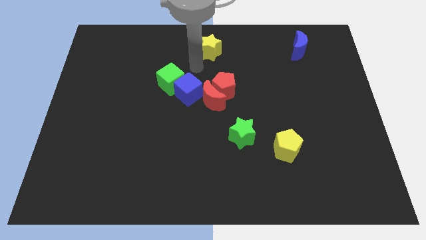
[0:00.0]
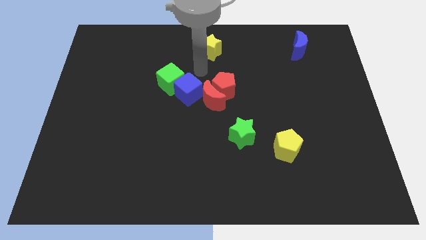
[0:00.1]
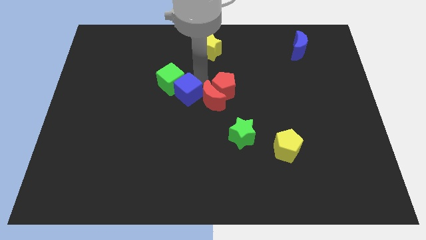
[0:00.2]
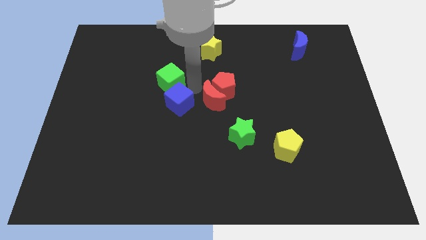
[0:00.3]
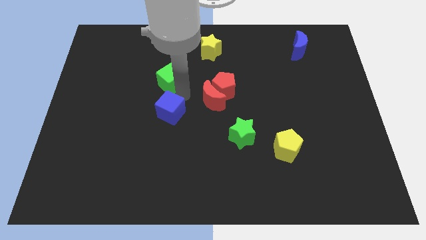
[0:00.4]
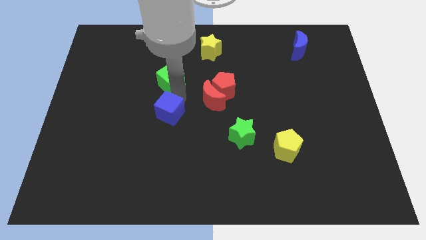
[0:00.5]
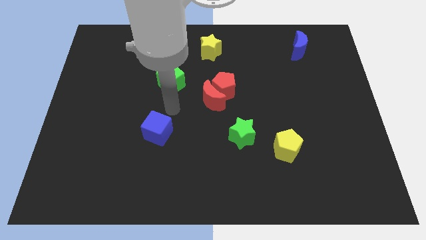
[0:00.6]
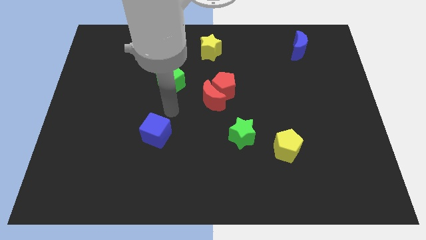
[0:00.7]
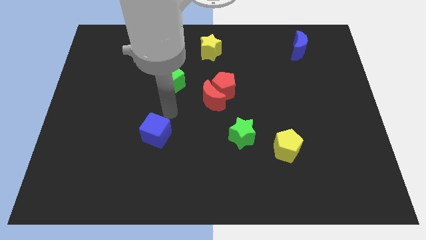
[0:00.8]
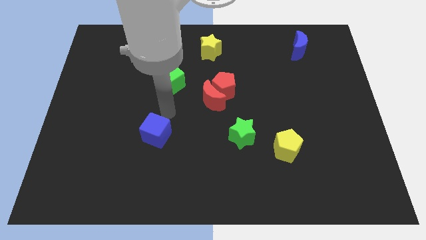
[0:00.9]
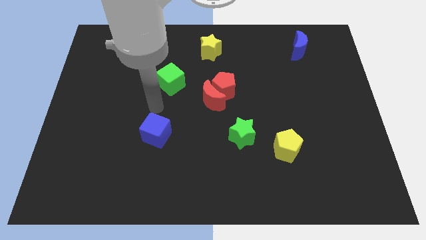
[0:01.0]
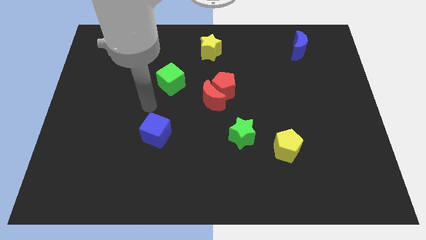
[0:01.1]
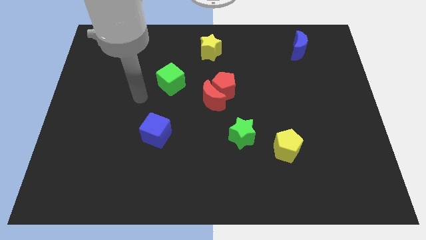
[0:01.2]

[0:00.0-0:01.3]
move green cube slightly down

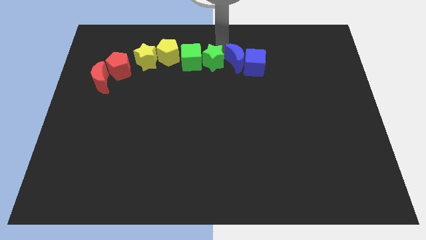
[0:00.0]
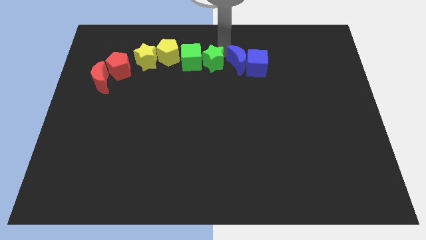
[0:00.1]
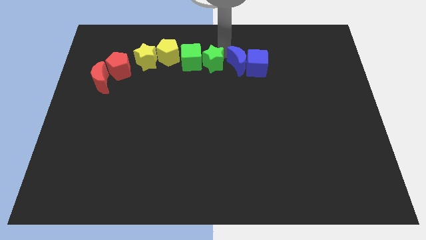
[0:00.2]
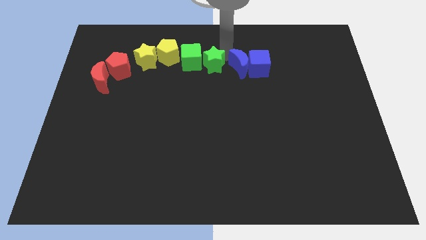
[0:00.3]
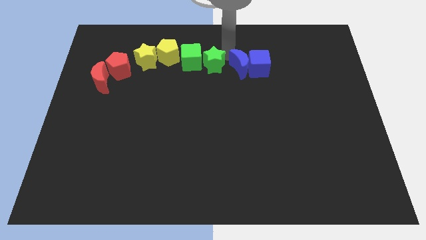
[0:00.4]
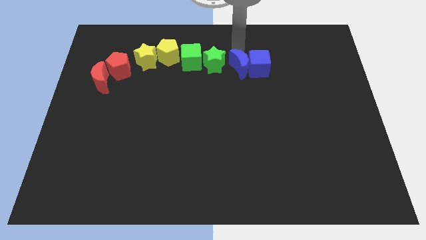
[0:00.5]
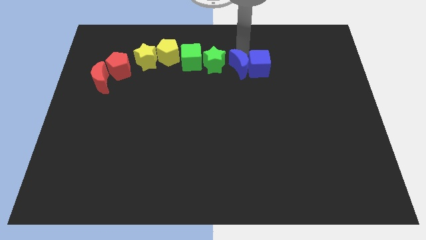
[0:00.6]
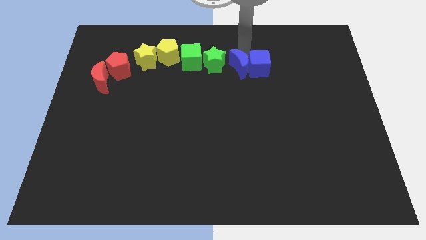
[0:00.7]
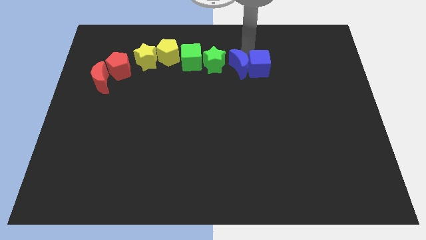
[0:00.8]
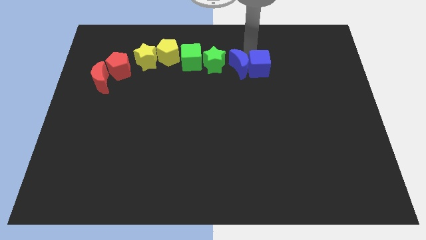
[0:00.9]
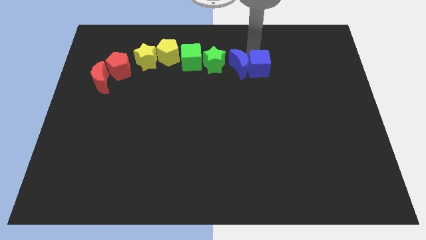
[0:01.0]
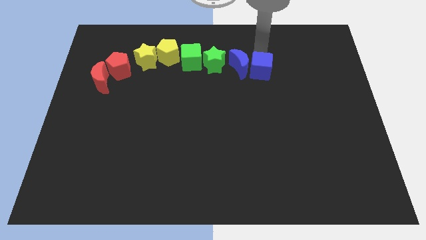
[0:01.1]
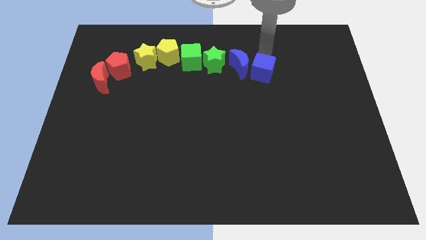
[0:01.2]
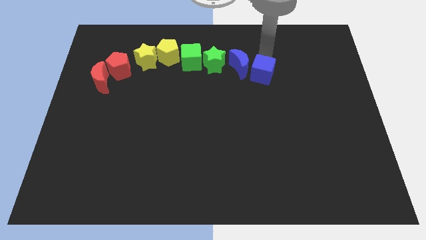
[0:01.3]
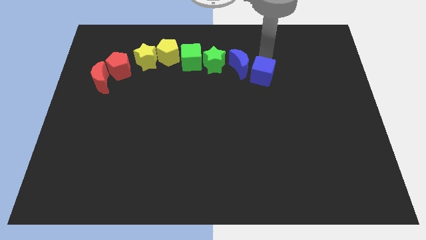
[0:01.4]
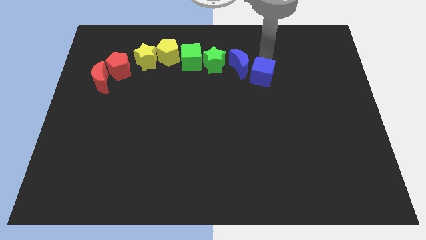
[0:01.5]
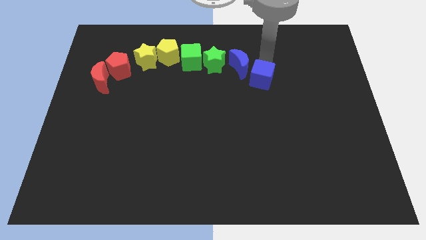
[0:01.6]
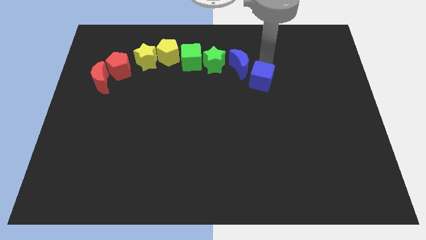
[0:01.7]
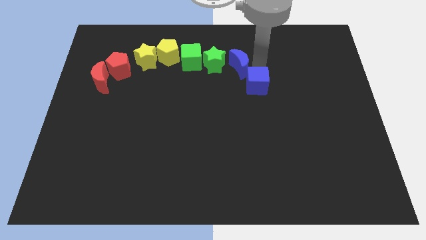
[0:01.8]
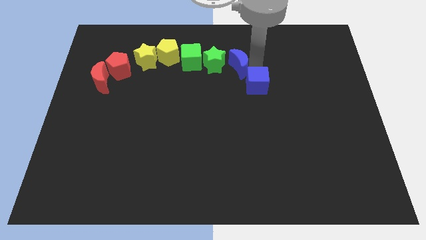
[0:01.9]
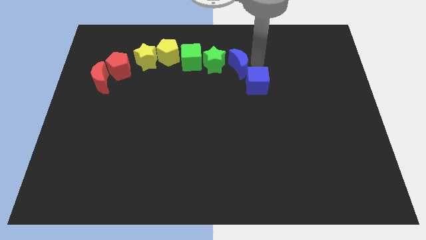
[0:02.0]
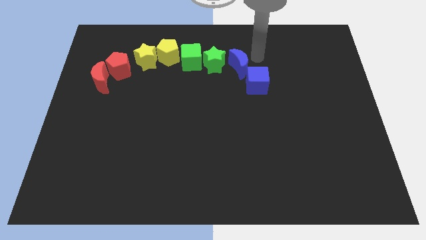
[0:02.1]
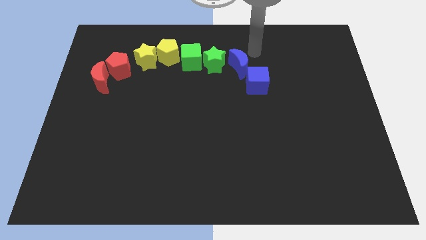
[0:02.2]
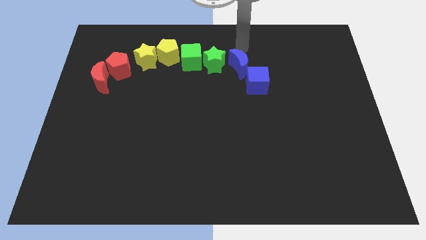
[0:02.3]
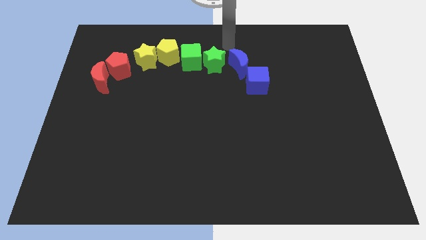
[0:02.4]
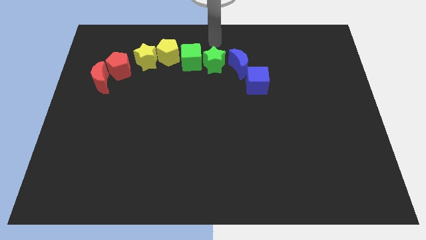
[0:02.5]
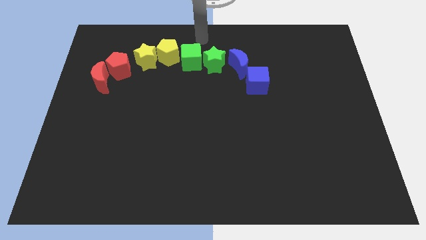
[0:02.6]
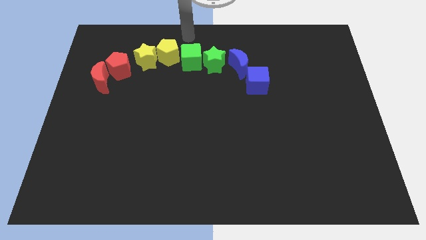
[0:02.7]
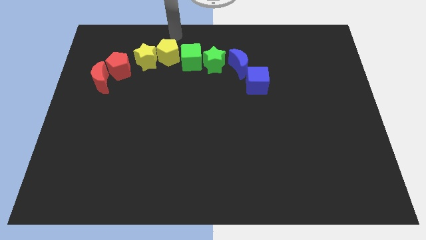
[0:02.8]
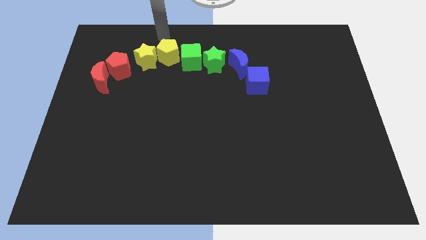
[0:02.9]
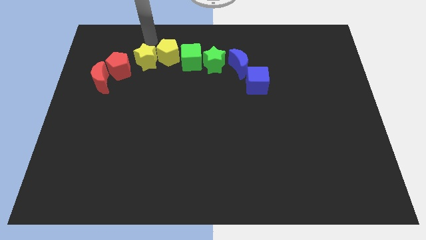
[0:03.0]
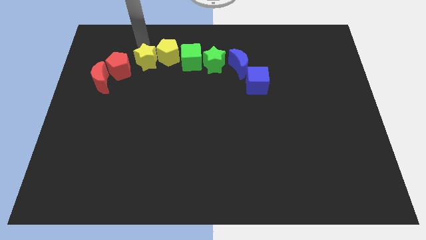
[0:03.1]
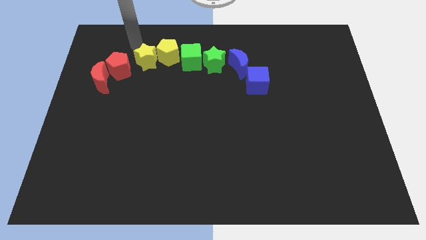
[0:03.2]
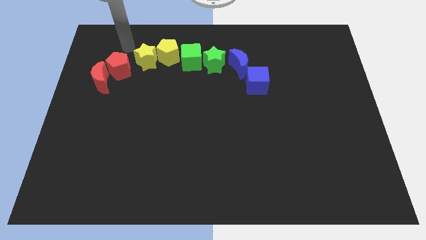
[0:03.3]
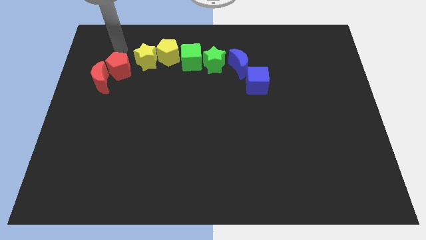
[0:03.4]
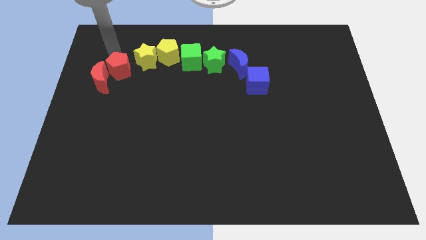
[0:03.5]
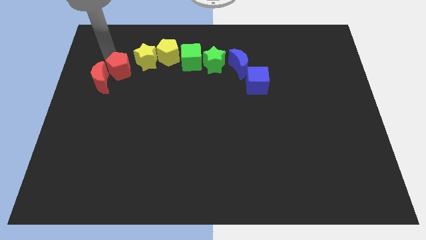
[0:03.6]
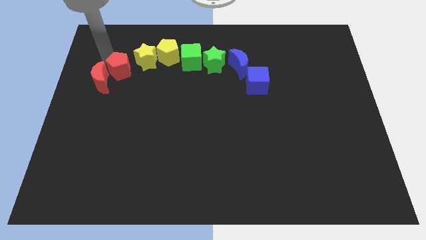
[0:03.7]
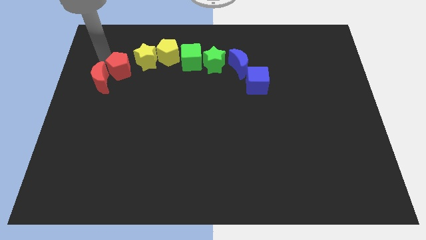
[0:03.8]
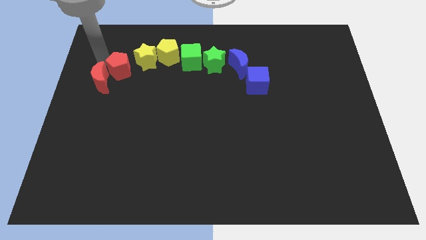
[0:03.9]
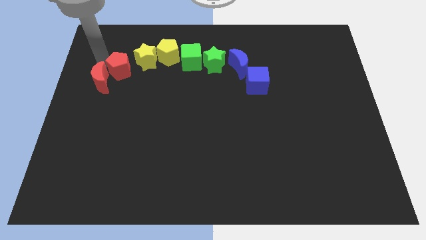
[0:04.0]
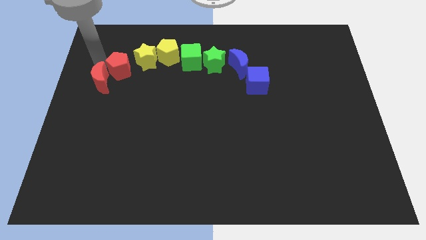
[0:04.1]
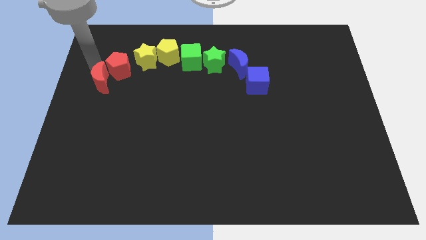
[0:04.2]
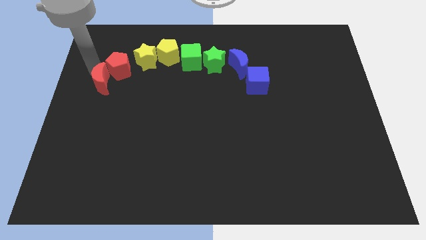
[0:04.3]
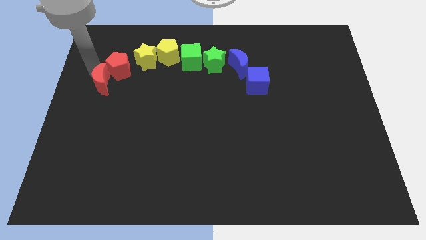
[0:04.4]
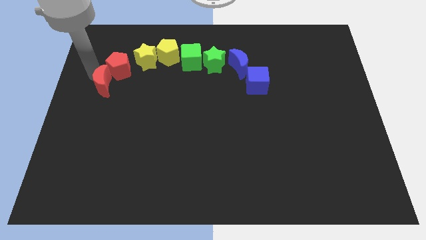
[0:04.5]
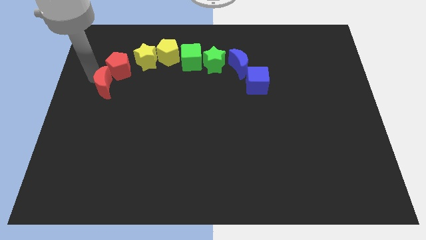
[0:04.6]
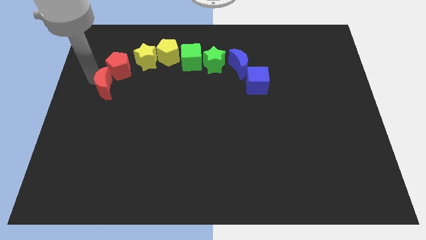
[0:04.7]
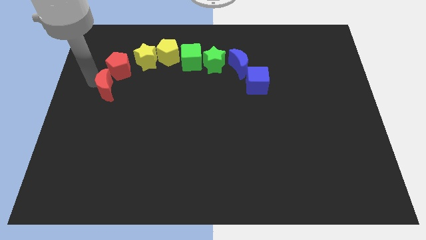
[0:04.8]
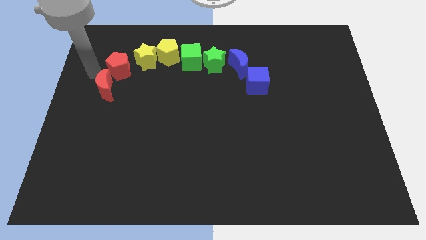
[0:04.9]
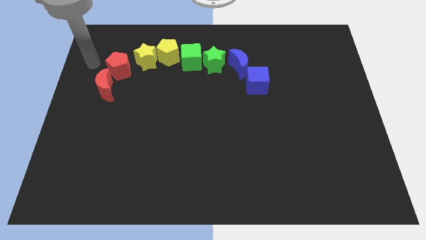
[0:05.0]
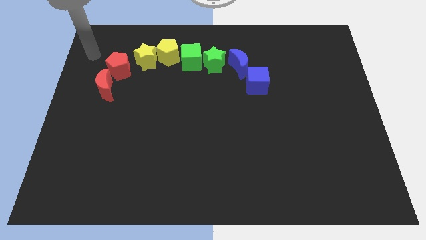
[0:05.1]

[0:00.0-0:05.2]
slightly move the blue cube and red crescent towards the bottom of the board

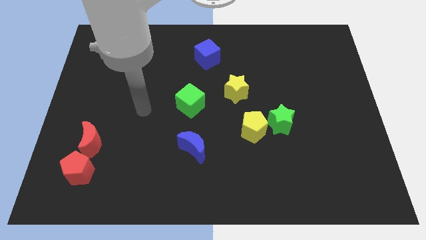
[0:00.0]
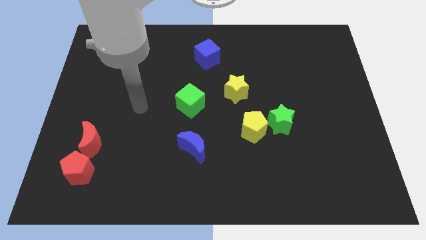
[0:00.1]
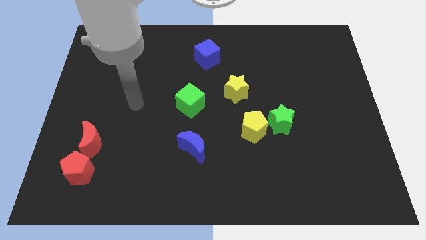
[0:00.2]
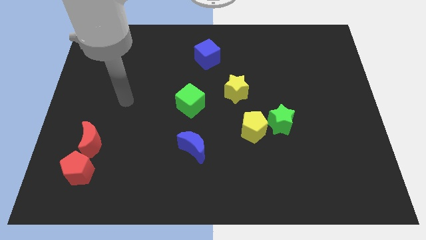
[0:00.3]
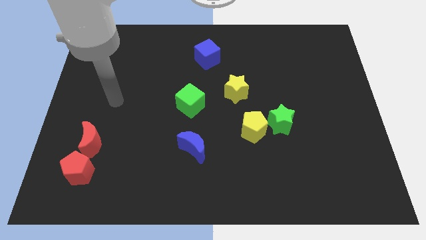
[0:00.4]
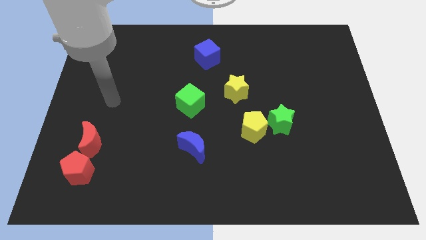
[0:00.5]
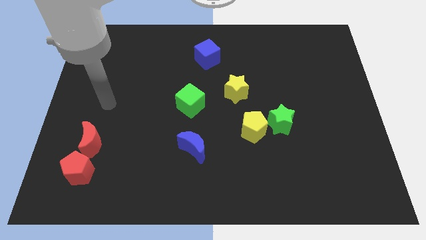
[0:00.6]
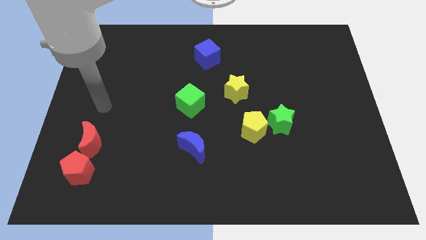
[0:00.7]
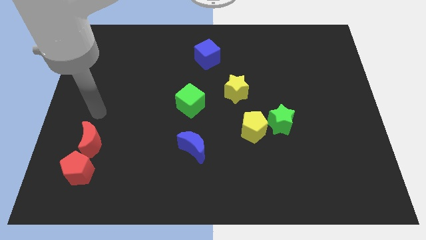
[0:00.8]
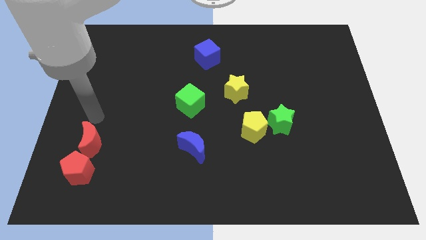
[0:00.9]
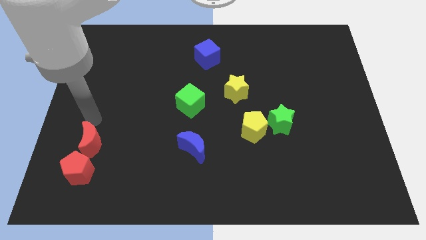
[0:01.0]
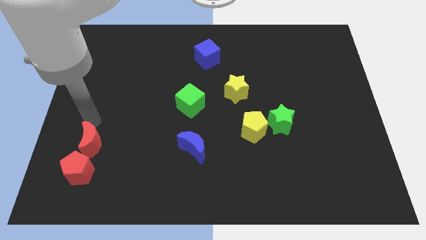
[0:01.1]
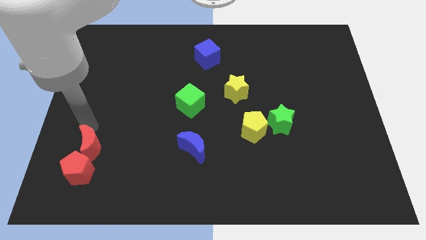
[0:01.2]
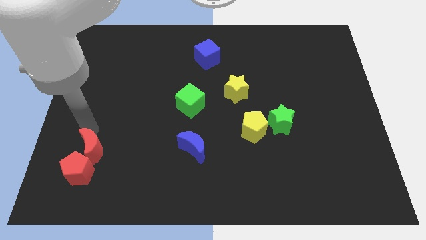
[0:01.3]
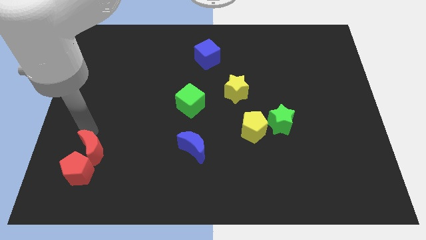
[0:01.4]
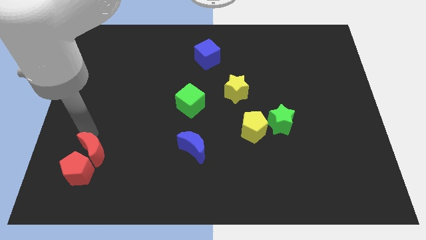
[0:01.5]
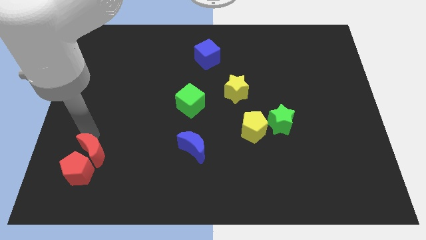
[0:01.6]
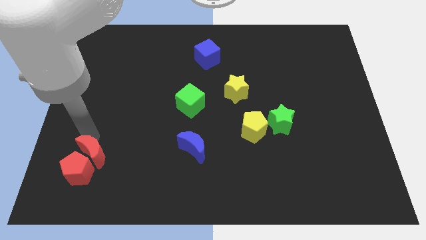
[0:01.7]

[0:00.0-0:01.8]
push the red crescent to the top right of the red pentagon

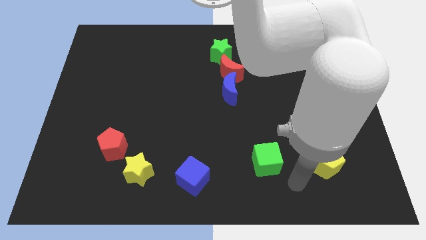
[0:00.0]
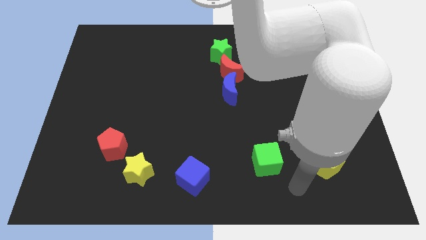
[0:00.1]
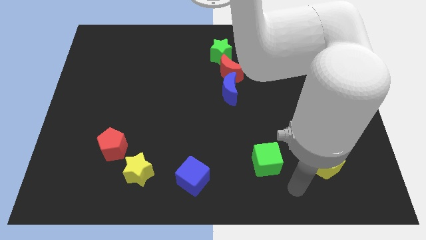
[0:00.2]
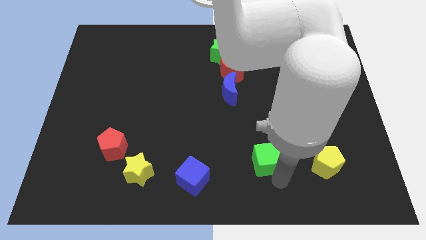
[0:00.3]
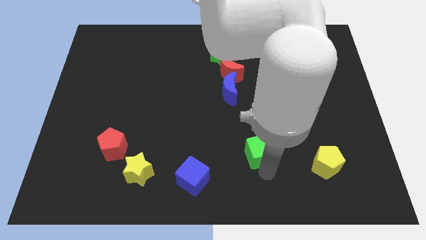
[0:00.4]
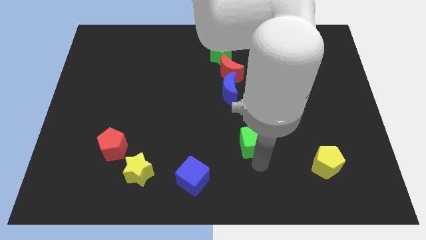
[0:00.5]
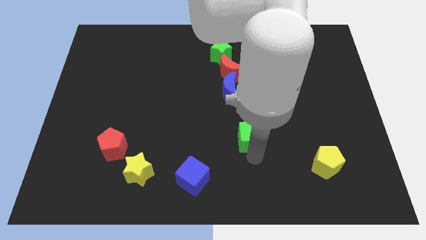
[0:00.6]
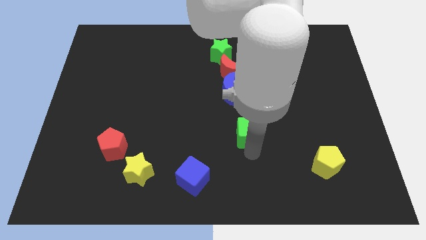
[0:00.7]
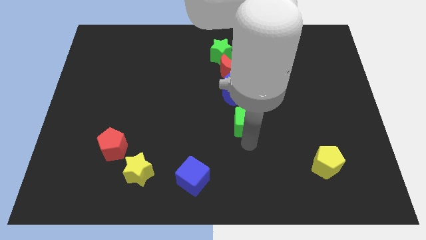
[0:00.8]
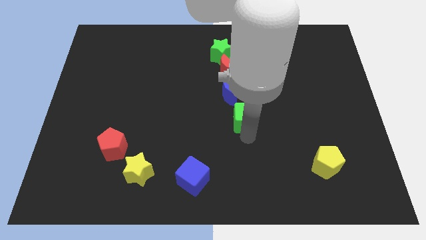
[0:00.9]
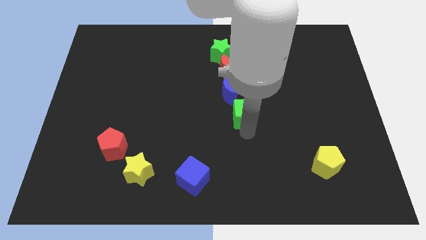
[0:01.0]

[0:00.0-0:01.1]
push green cube towards center
